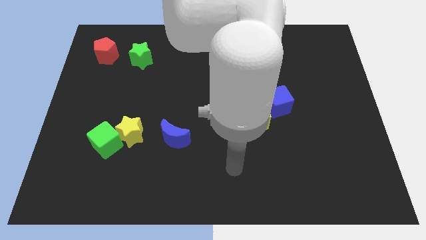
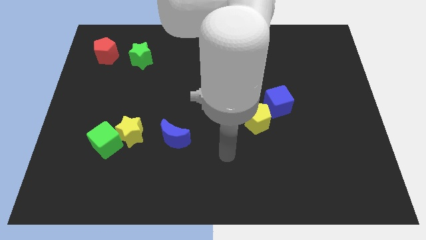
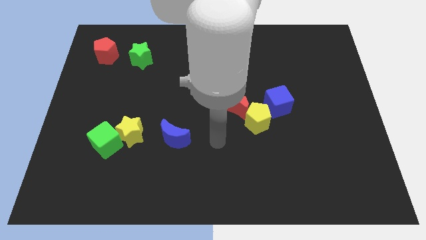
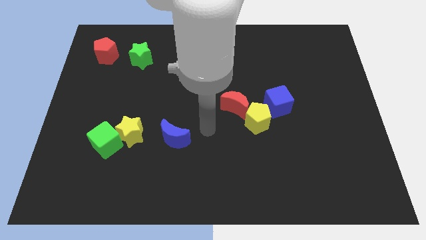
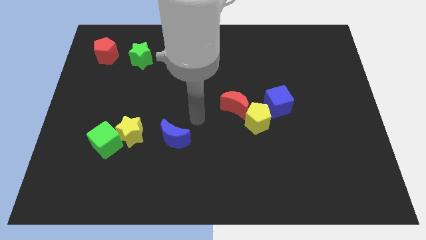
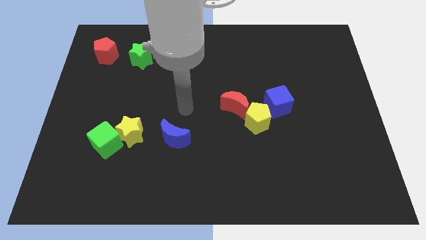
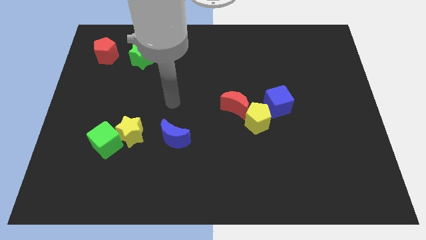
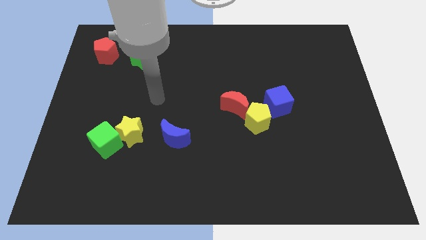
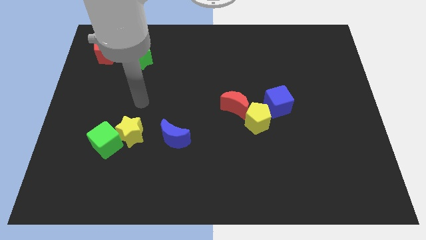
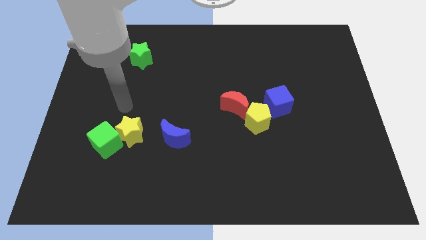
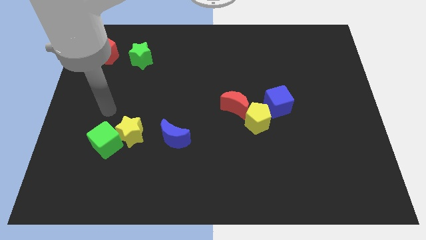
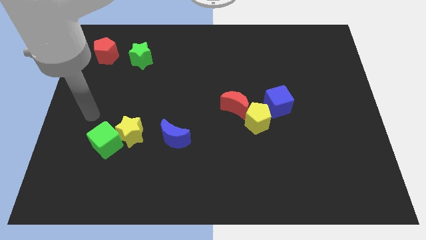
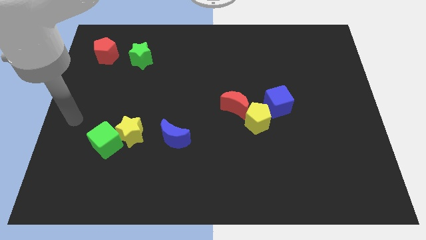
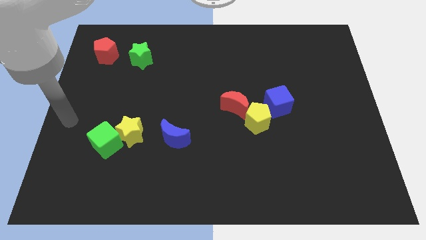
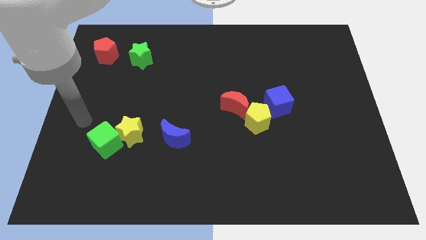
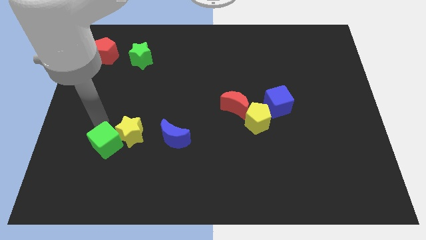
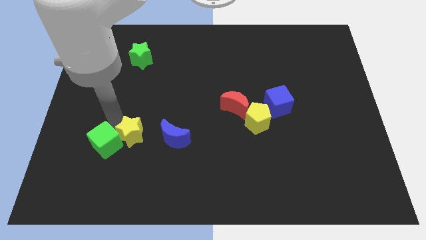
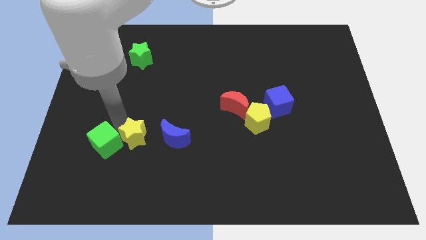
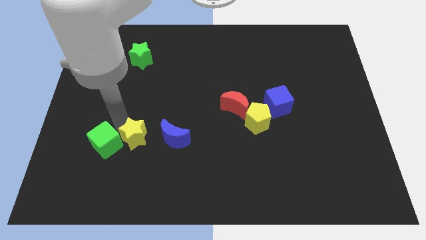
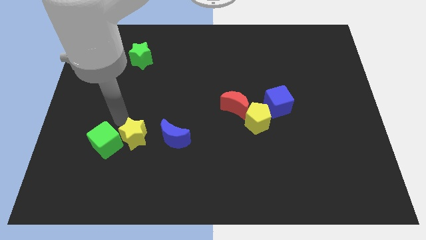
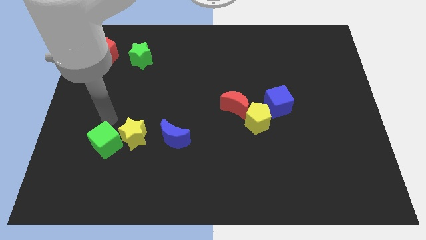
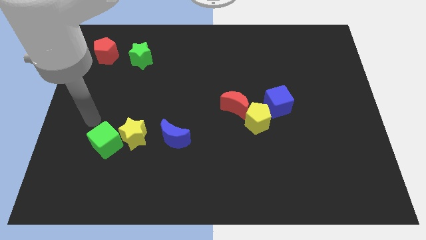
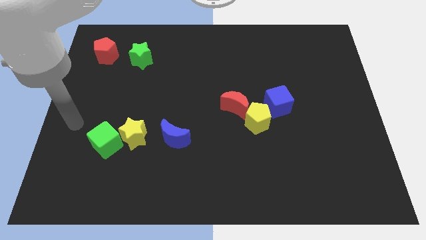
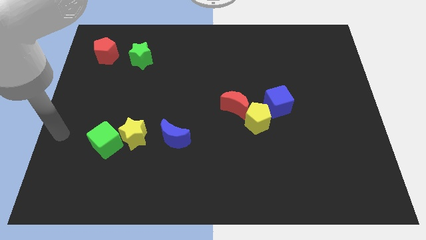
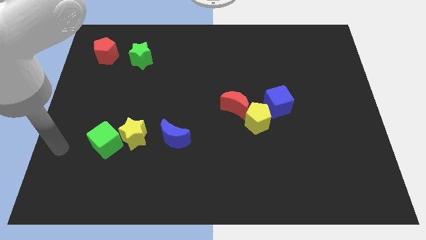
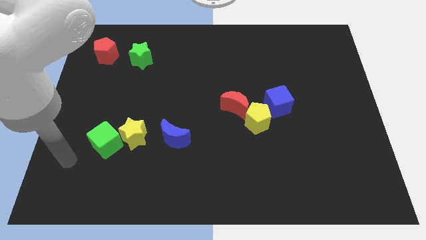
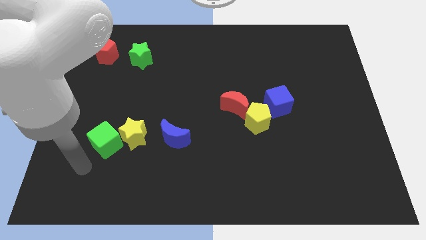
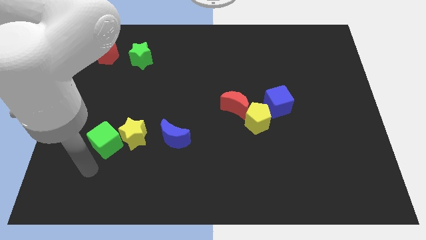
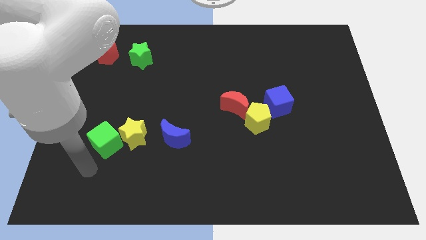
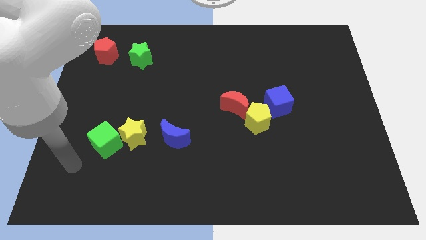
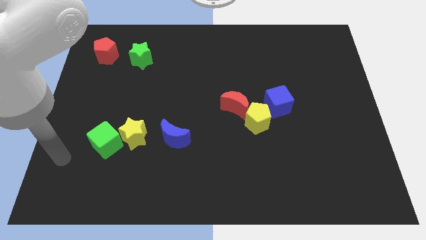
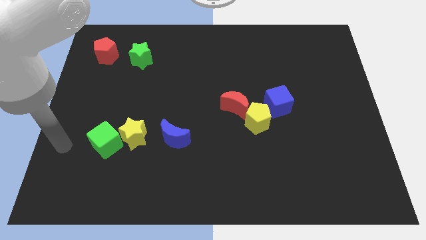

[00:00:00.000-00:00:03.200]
tap the top side of the yellow star

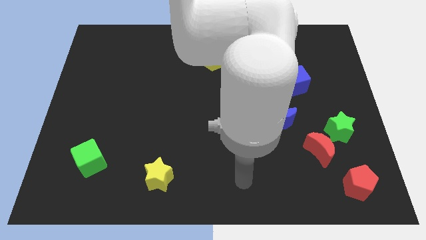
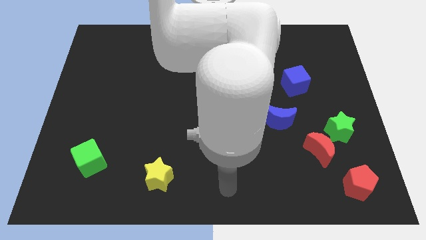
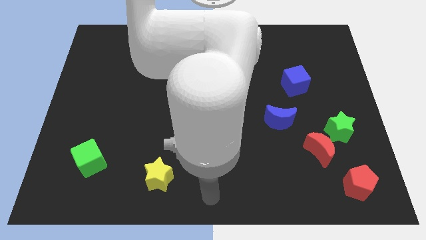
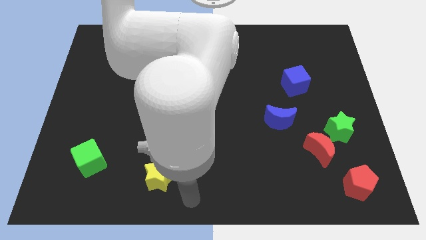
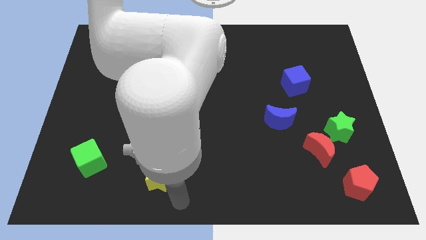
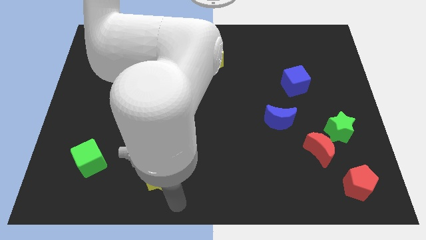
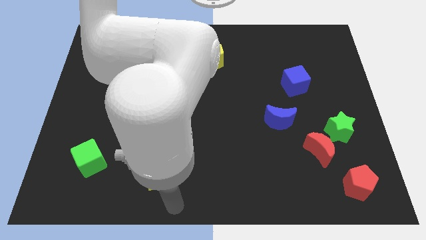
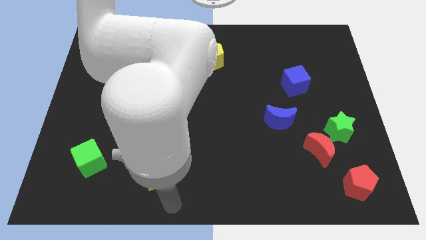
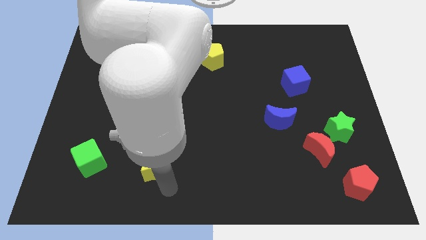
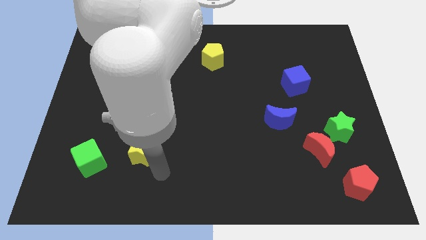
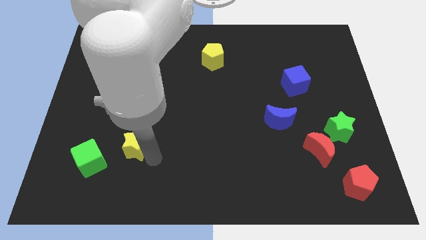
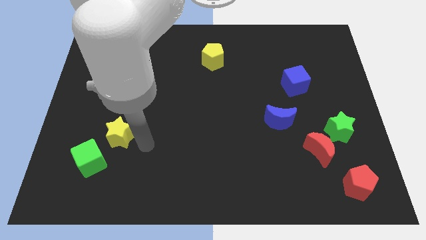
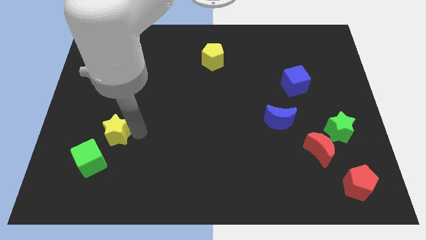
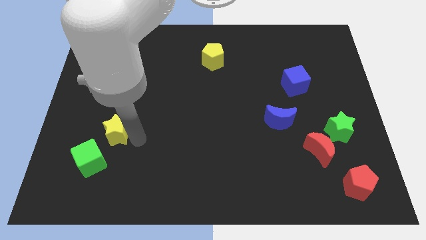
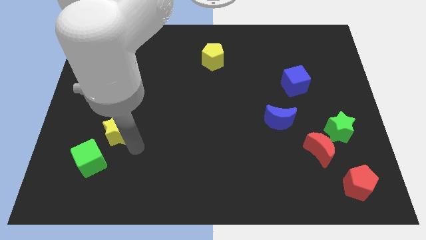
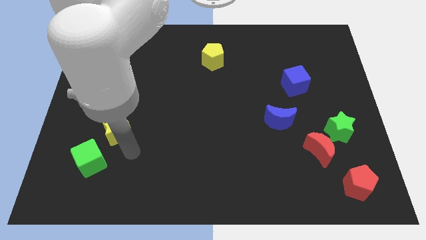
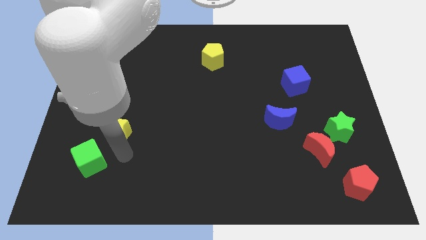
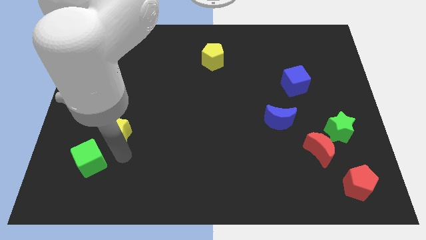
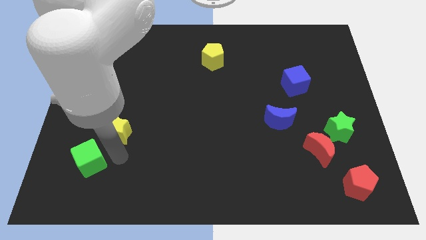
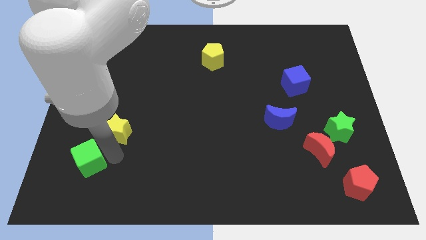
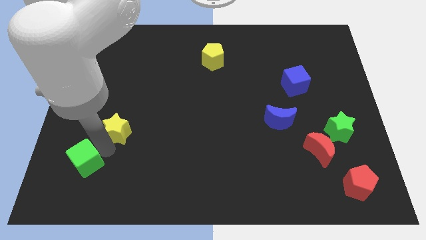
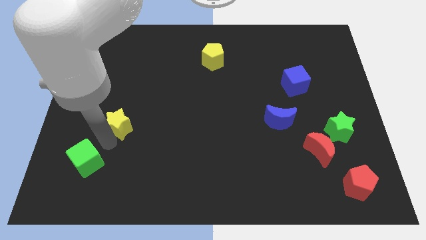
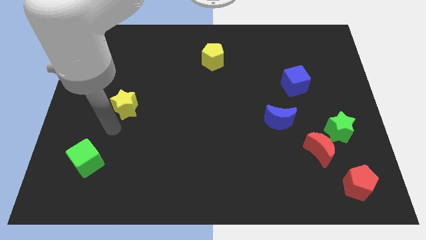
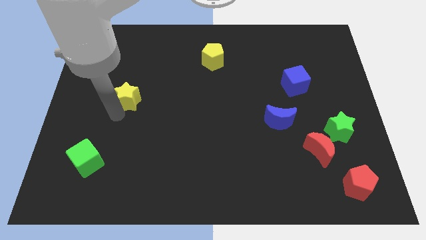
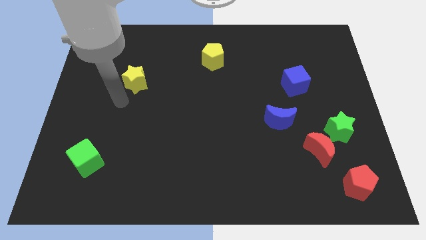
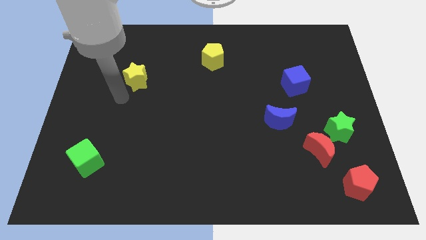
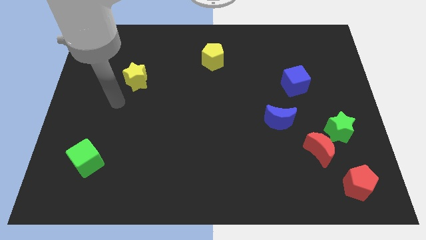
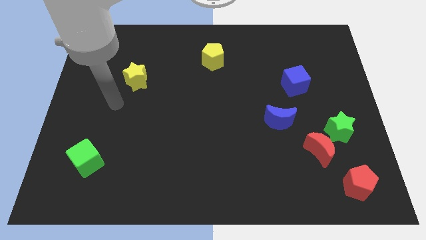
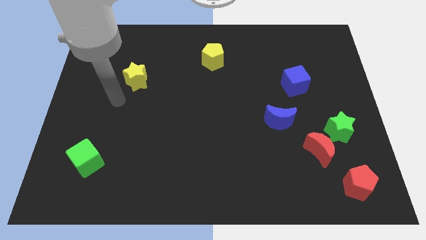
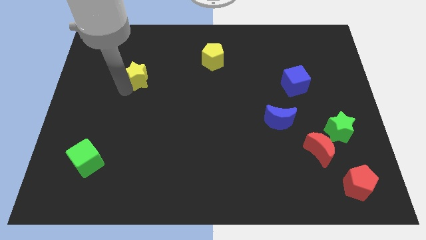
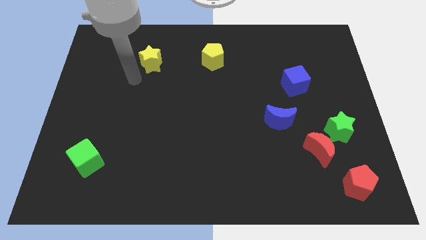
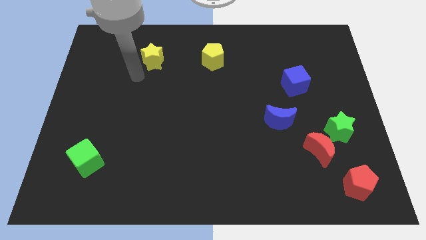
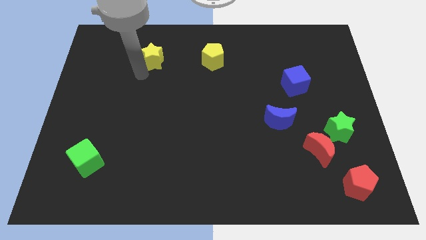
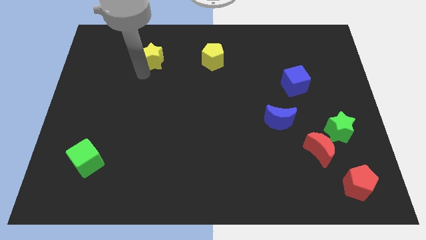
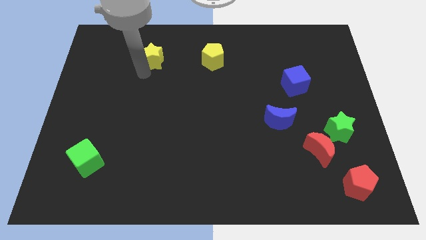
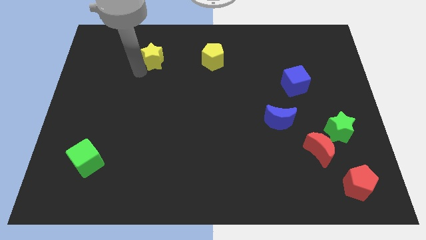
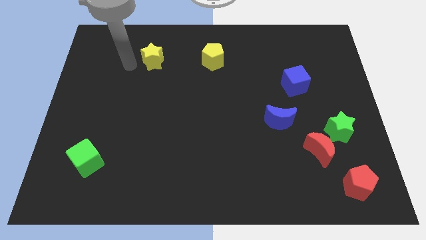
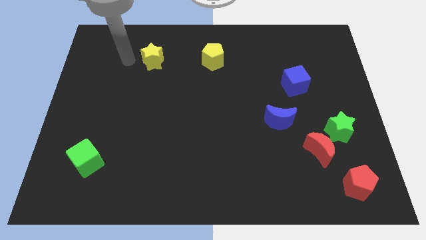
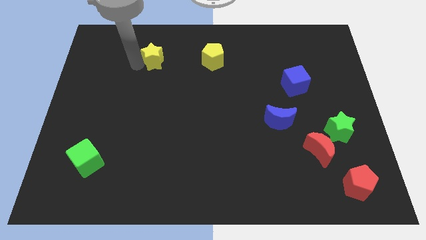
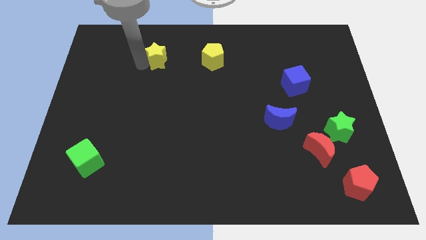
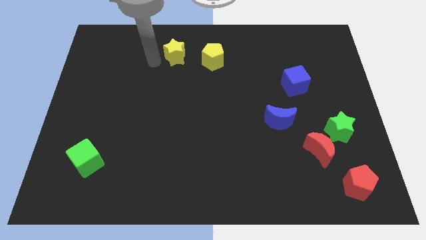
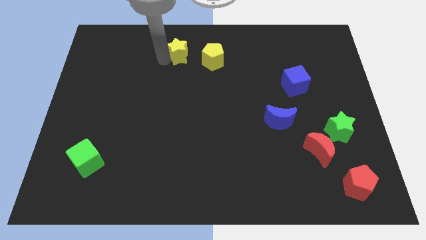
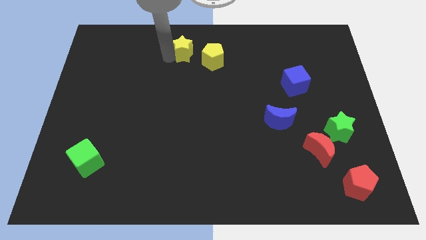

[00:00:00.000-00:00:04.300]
slide the yellow star towards the top center

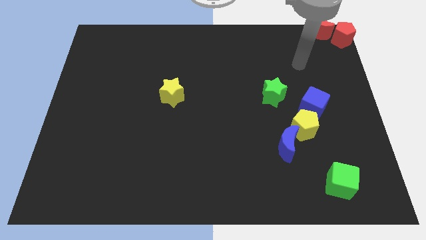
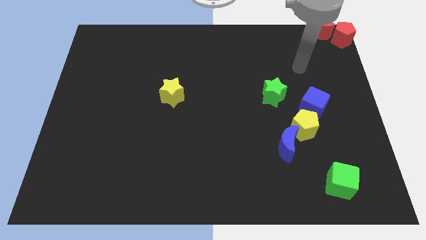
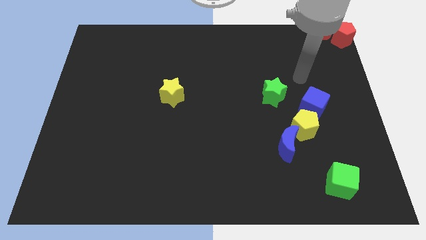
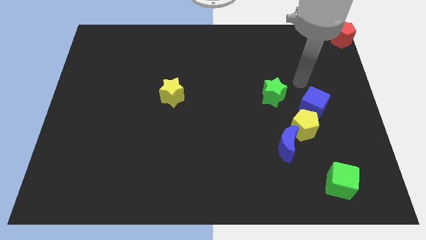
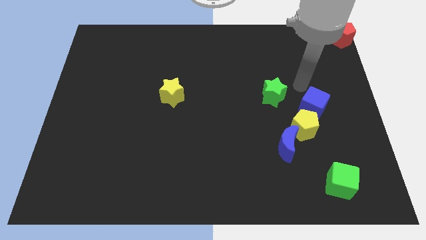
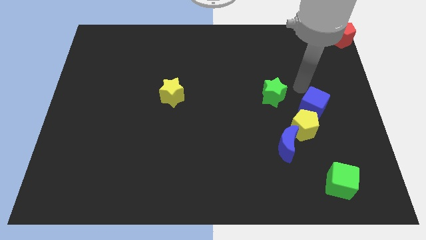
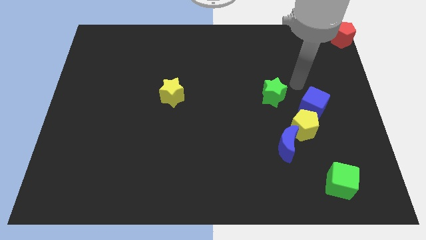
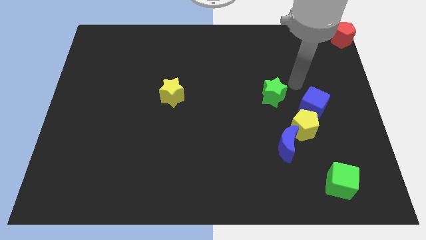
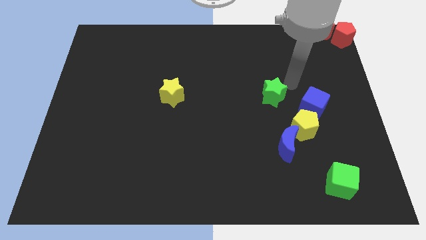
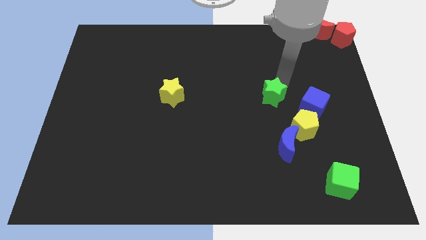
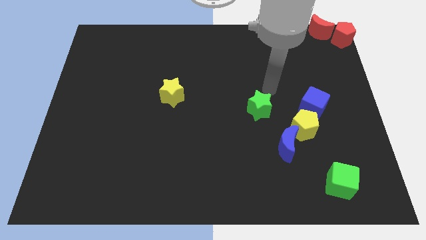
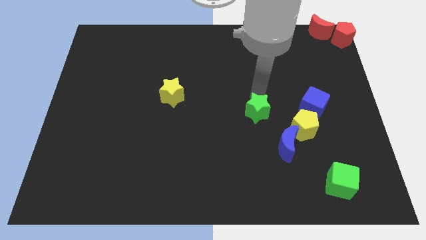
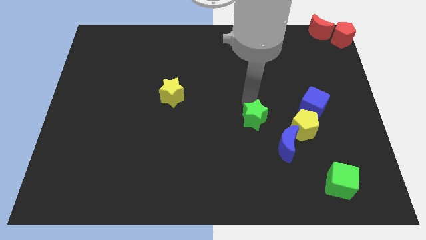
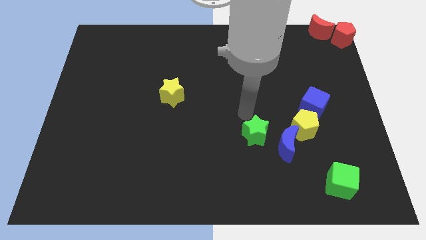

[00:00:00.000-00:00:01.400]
move your arm towards the green star

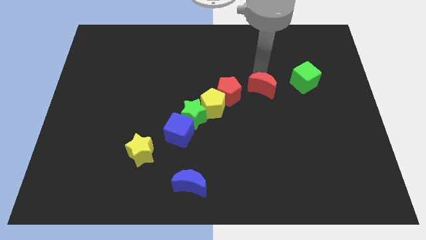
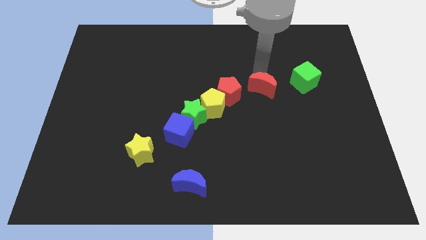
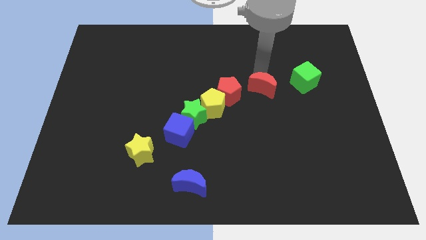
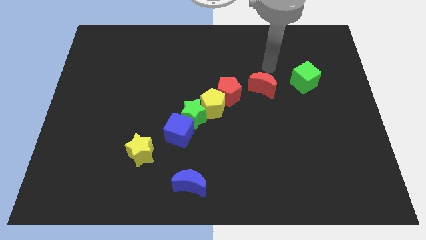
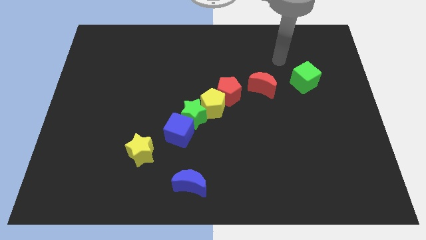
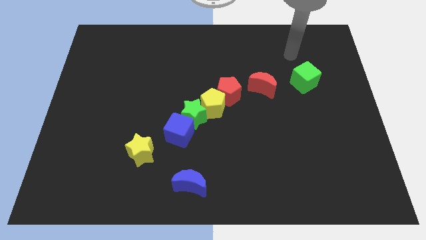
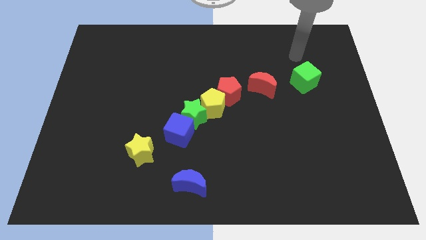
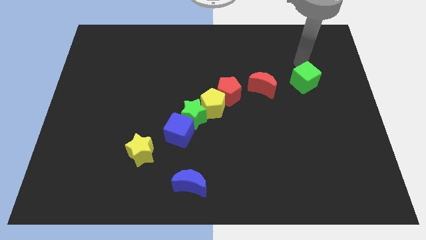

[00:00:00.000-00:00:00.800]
move the arm above the green cube
